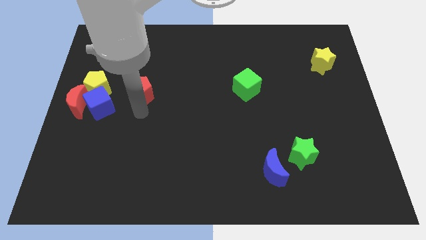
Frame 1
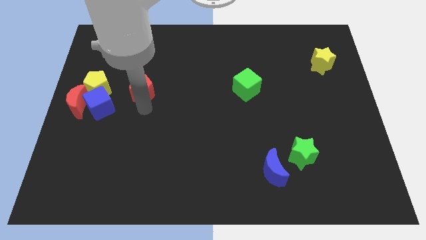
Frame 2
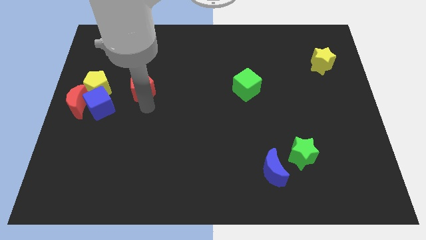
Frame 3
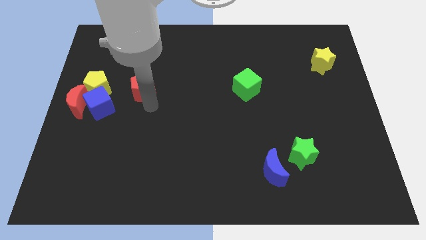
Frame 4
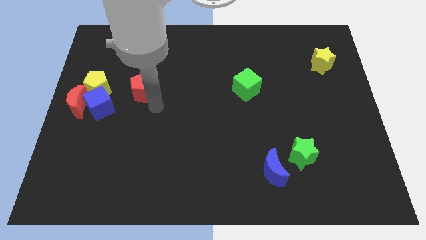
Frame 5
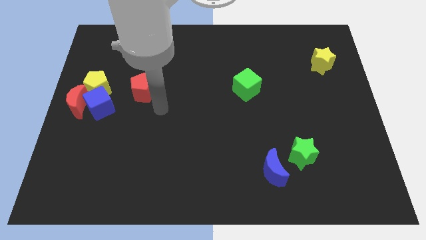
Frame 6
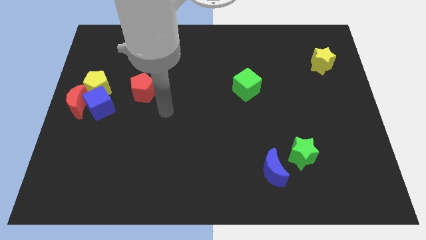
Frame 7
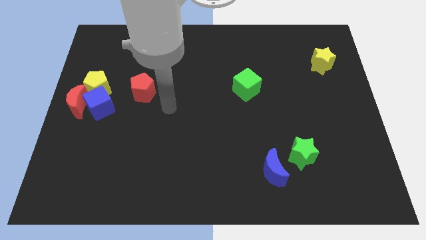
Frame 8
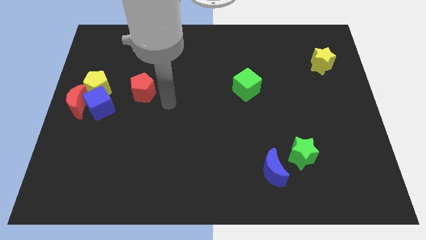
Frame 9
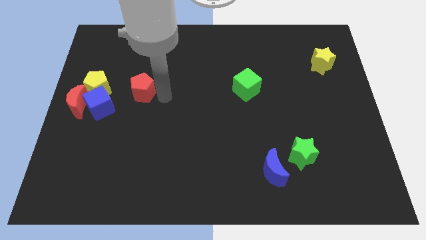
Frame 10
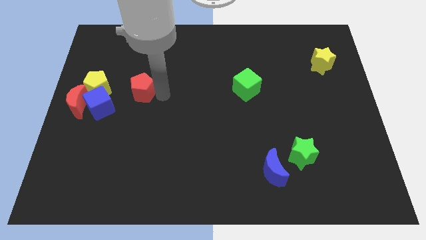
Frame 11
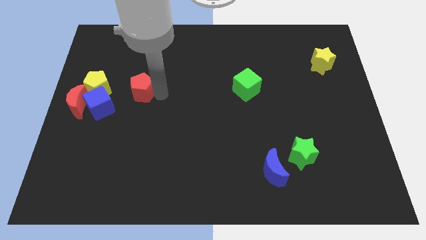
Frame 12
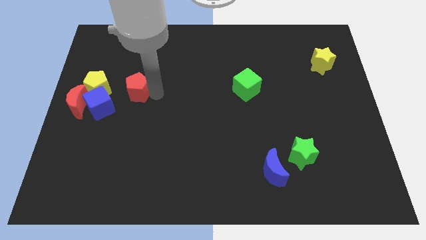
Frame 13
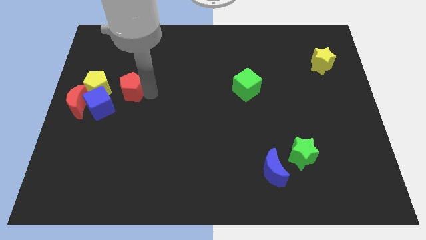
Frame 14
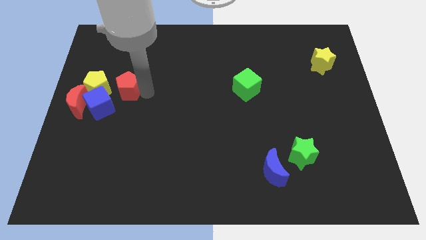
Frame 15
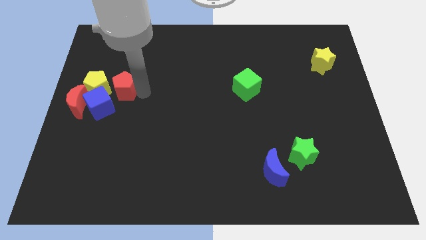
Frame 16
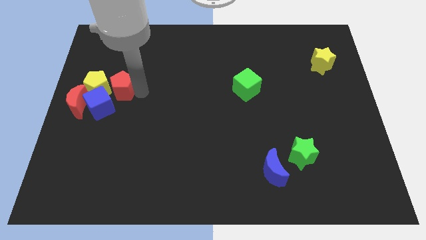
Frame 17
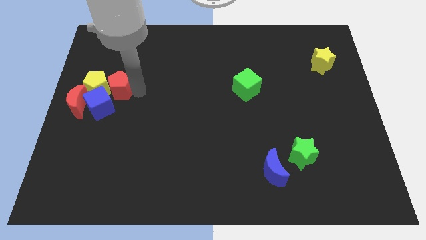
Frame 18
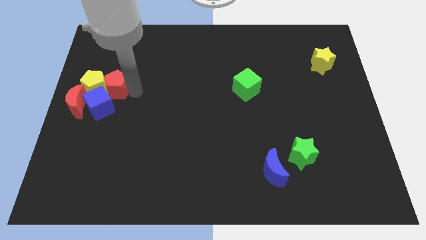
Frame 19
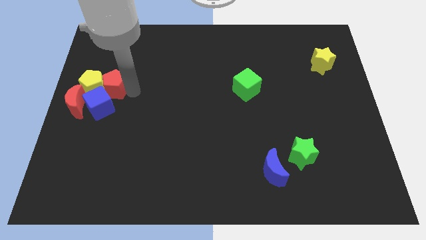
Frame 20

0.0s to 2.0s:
push the red pentagon near to the yellow pentagon

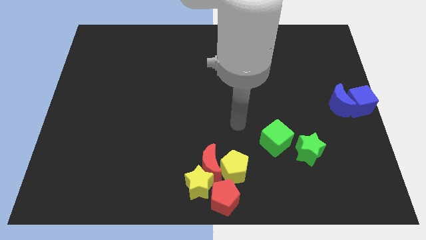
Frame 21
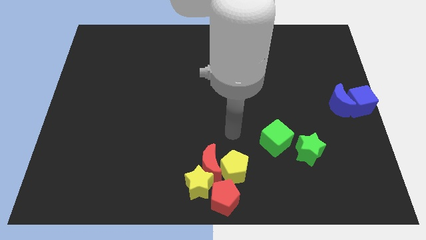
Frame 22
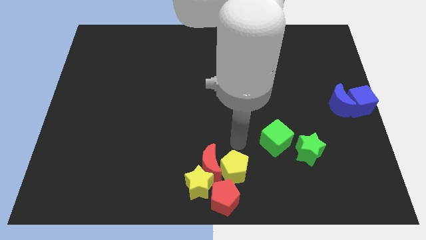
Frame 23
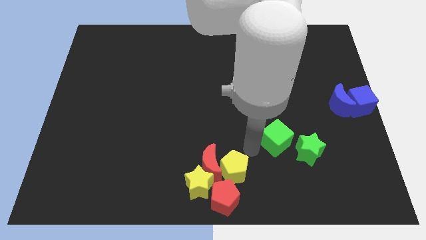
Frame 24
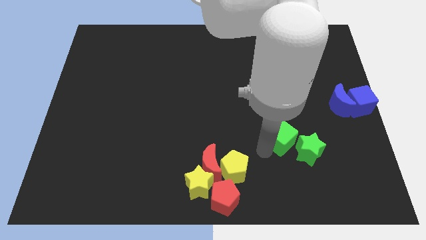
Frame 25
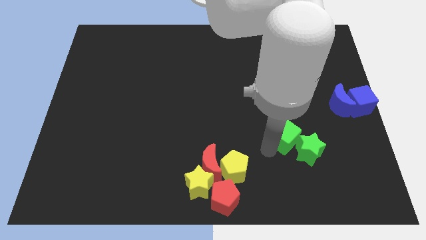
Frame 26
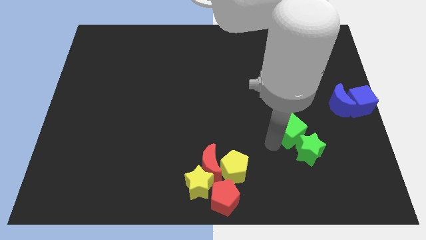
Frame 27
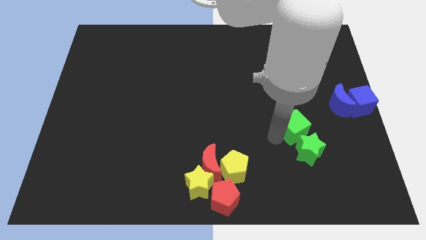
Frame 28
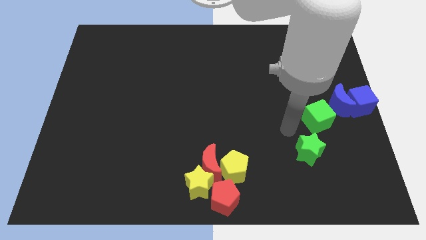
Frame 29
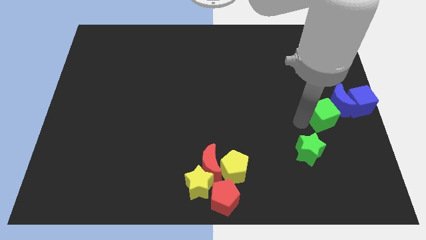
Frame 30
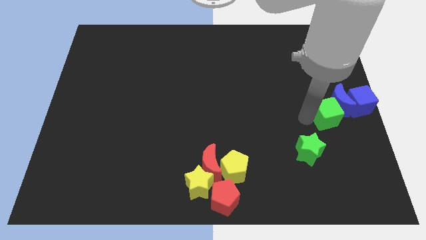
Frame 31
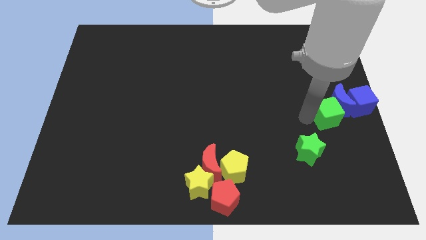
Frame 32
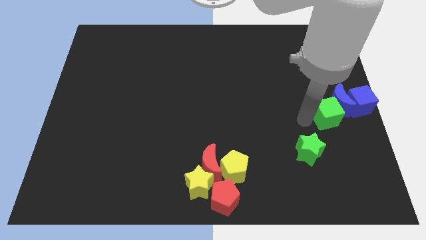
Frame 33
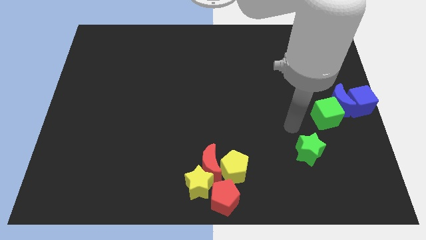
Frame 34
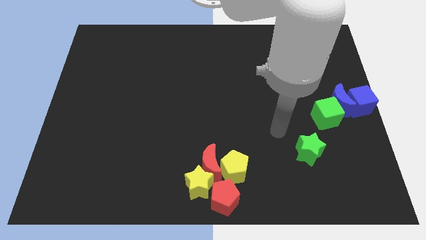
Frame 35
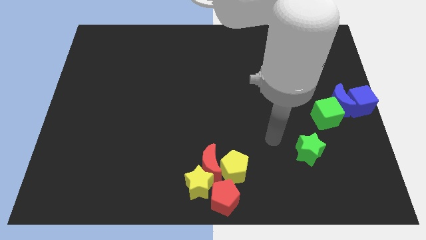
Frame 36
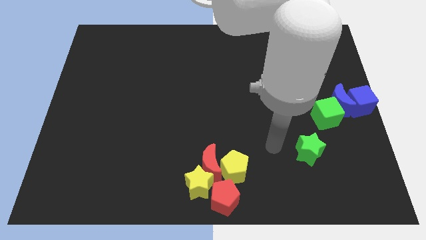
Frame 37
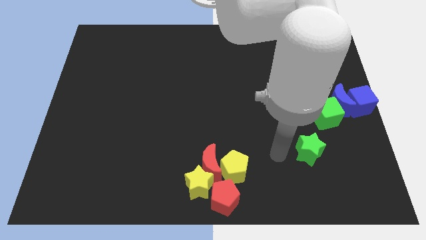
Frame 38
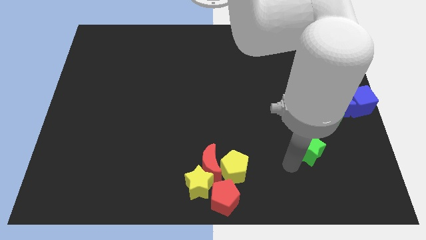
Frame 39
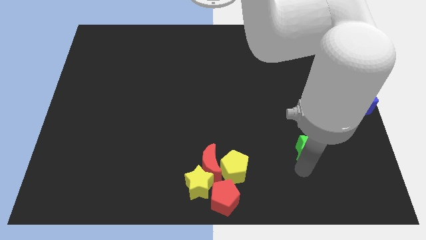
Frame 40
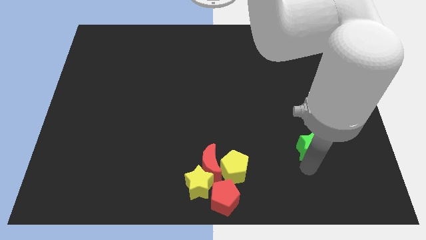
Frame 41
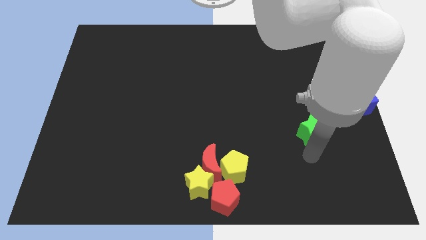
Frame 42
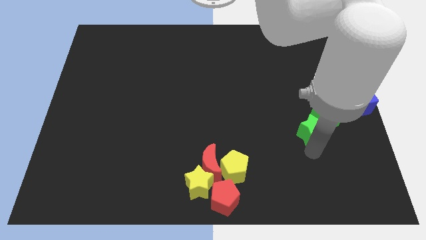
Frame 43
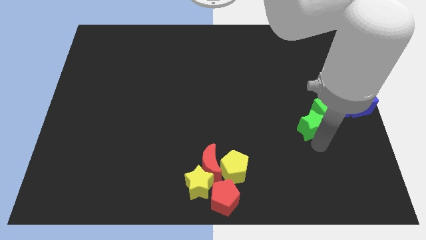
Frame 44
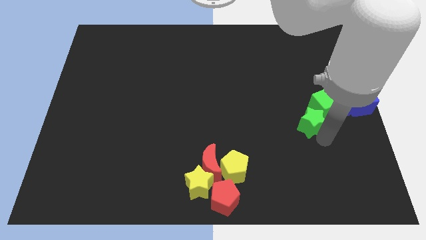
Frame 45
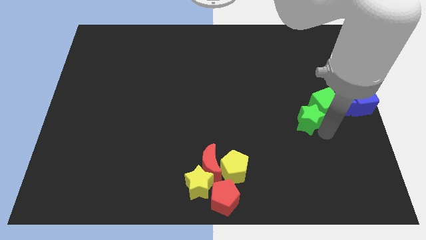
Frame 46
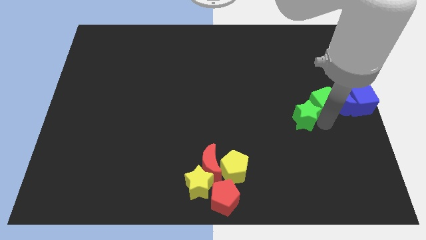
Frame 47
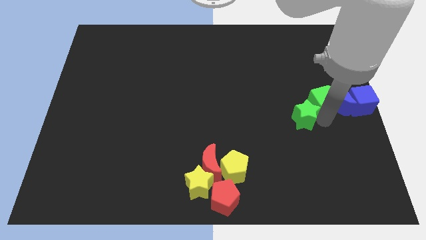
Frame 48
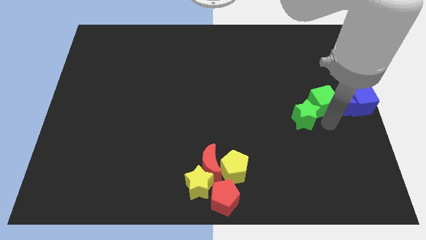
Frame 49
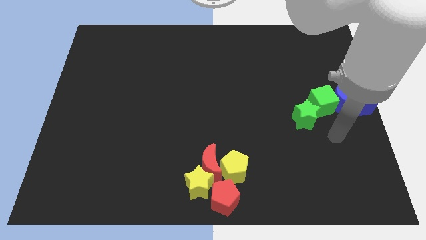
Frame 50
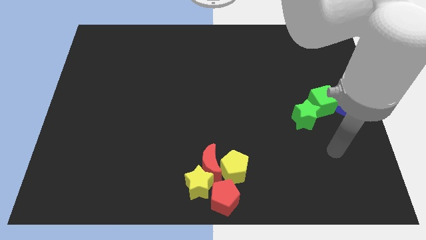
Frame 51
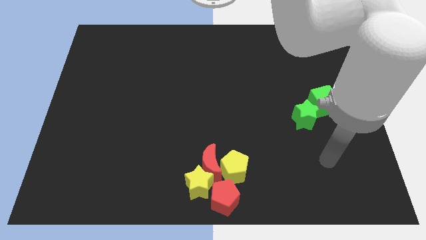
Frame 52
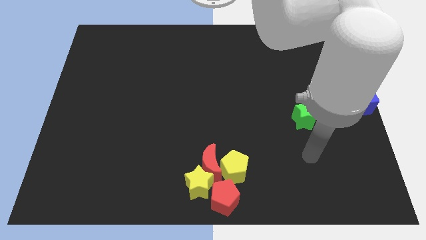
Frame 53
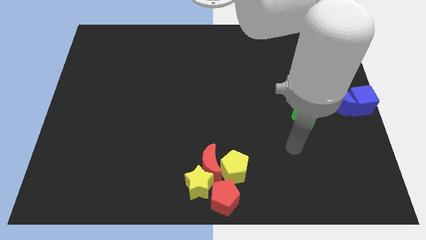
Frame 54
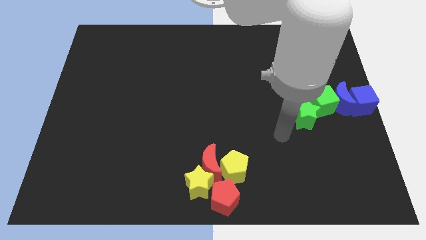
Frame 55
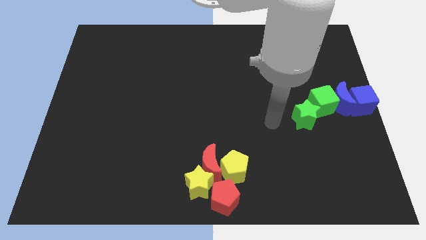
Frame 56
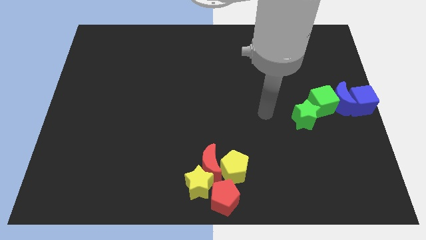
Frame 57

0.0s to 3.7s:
move the green blocks into the blue blocks

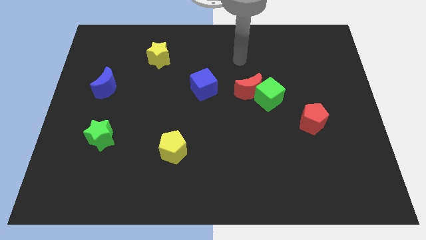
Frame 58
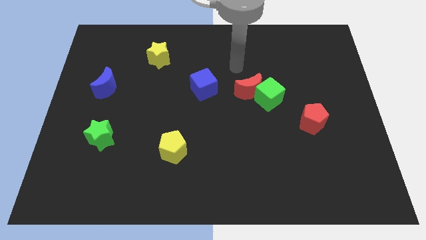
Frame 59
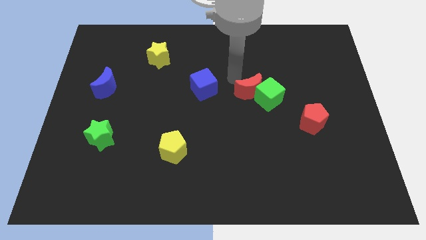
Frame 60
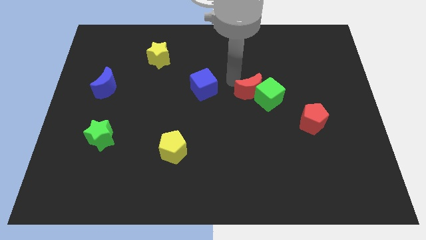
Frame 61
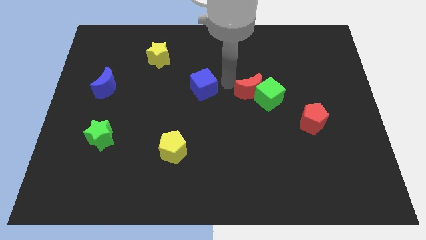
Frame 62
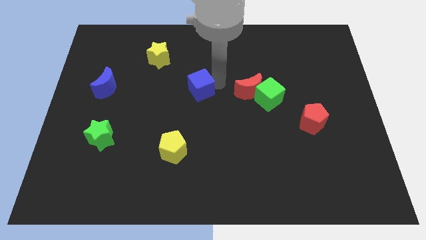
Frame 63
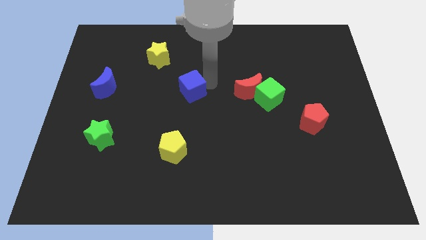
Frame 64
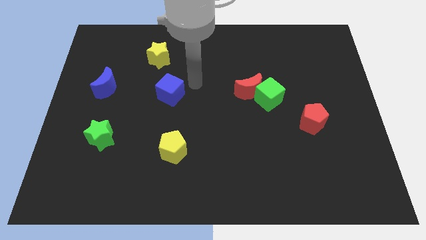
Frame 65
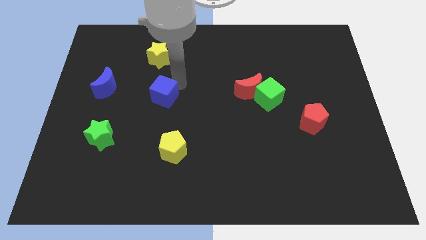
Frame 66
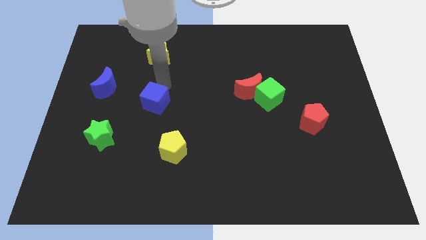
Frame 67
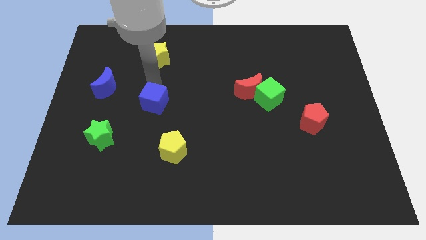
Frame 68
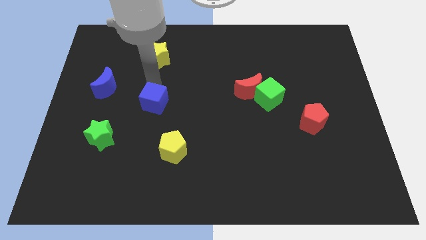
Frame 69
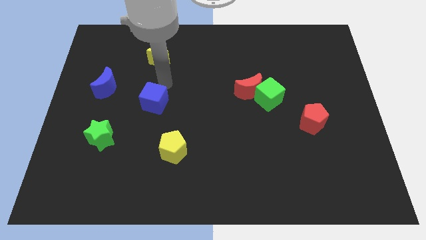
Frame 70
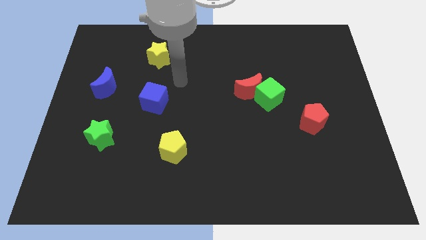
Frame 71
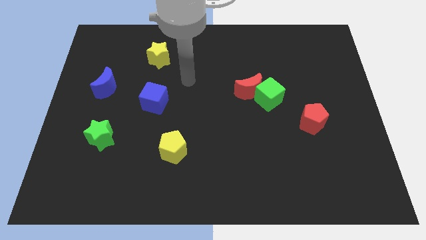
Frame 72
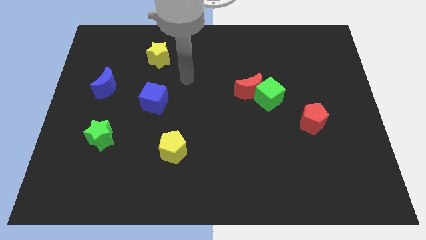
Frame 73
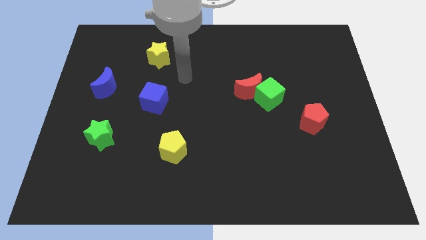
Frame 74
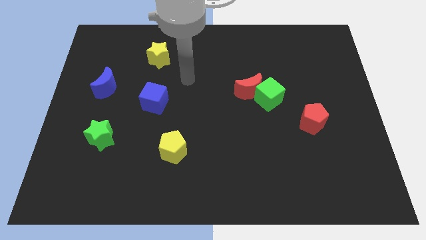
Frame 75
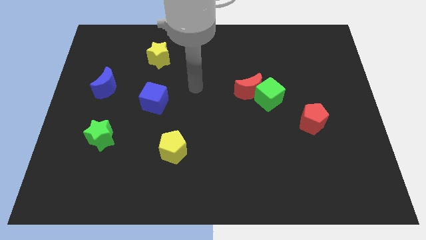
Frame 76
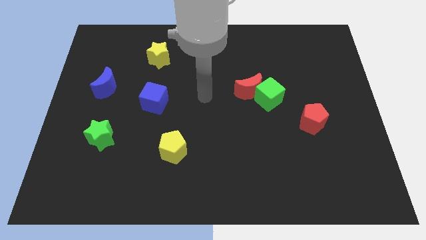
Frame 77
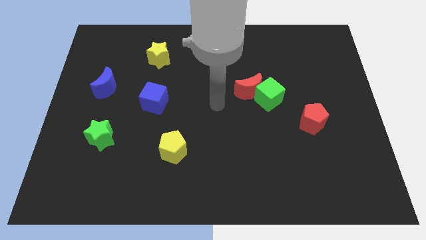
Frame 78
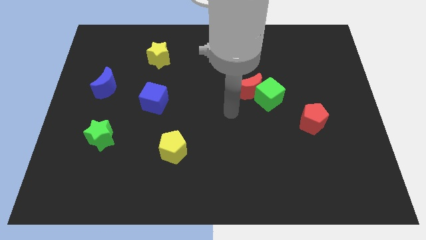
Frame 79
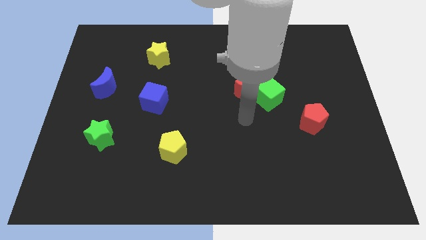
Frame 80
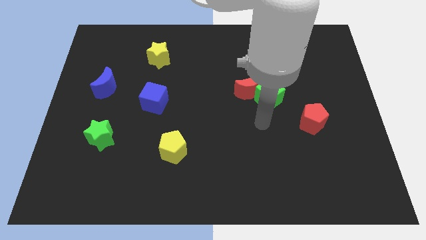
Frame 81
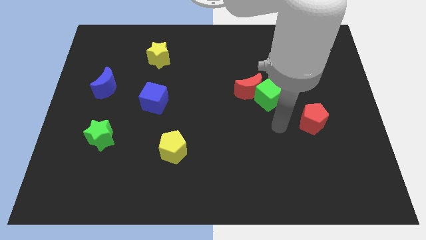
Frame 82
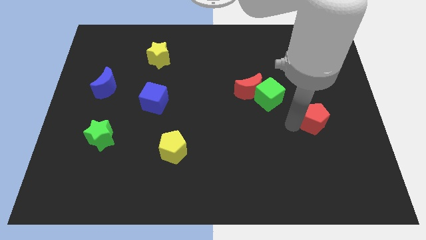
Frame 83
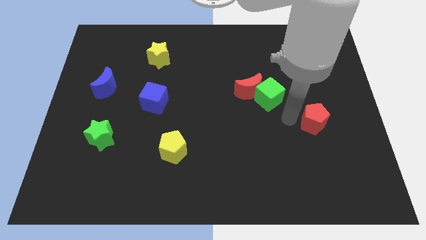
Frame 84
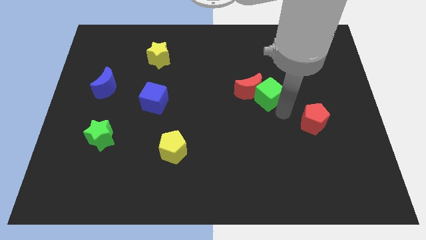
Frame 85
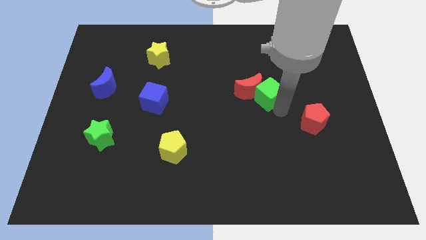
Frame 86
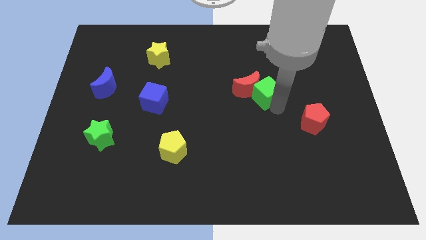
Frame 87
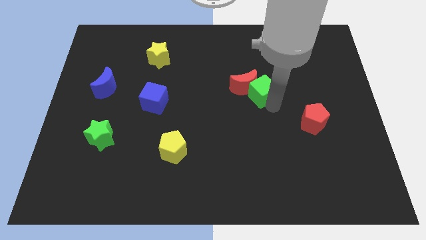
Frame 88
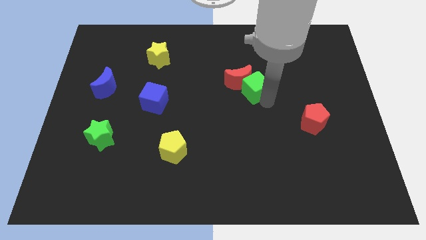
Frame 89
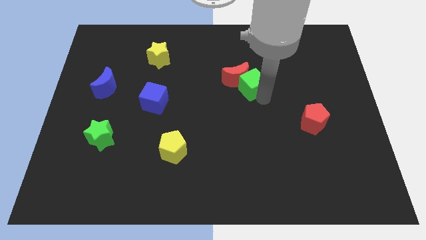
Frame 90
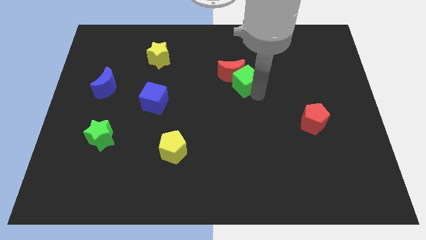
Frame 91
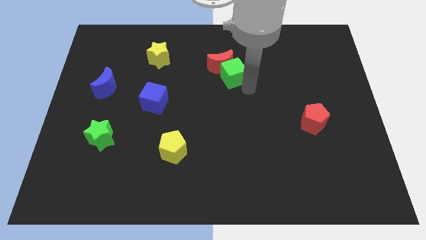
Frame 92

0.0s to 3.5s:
move blue cube towards the blue crescent
